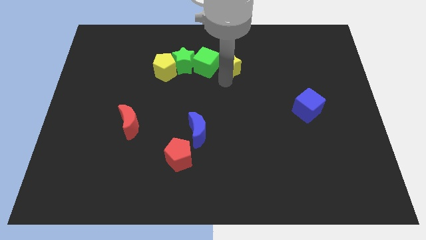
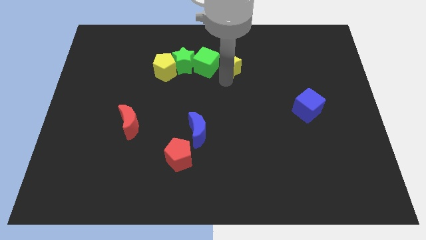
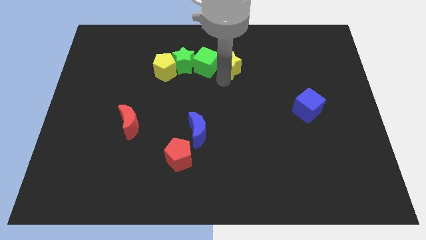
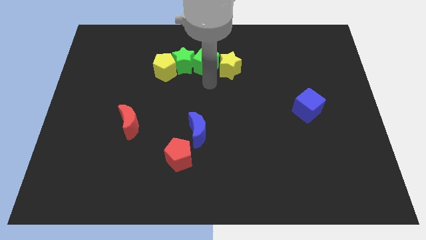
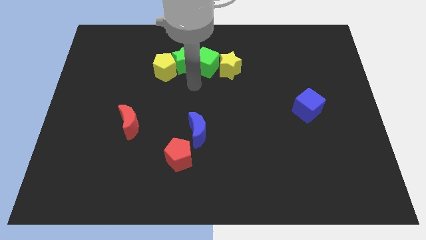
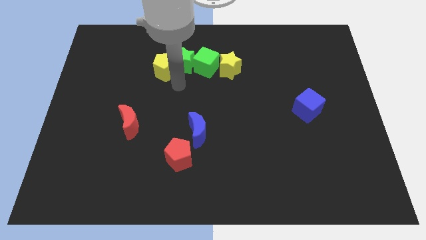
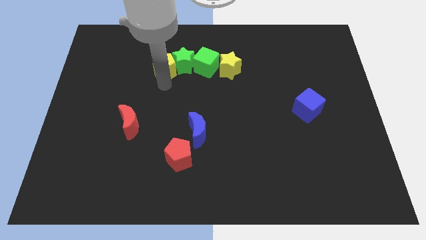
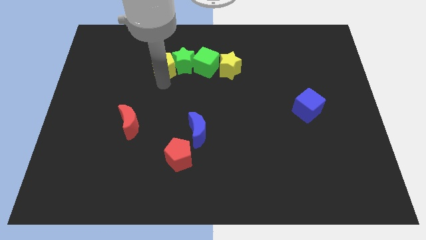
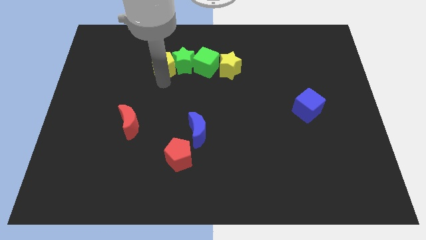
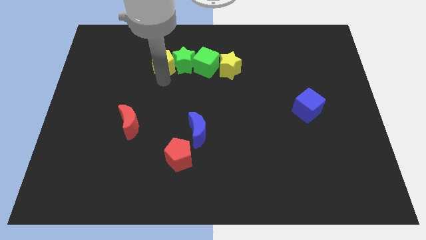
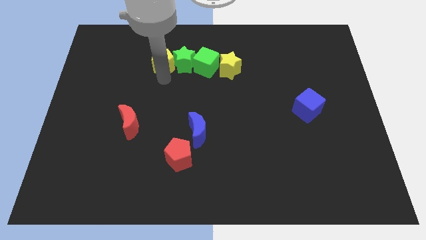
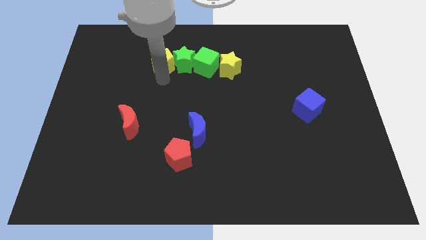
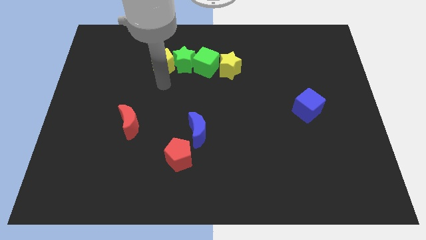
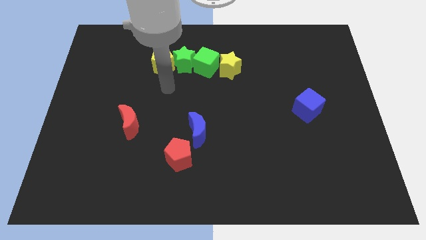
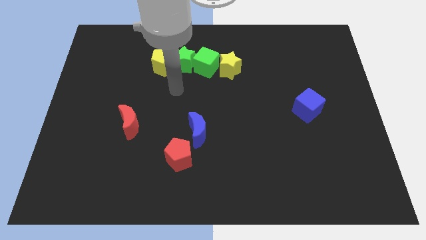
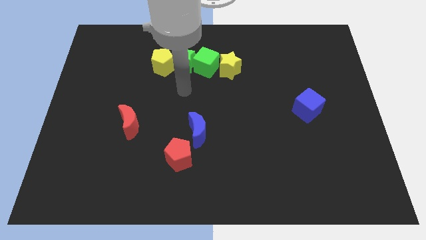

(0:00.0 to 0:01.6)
slightly move the yellow pentagon to the left of the green star

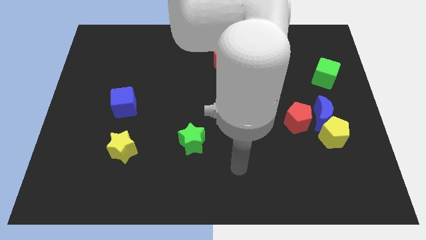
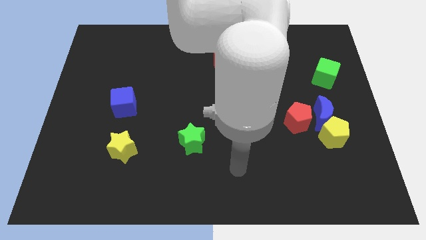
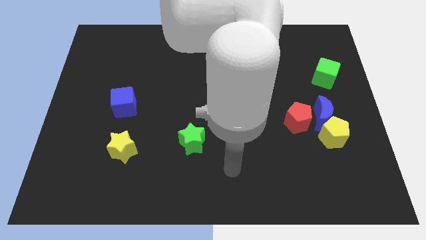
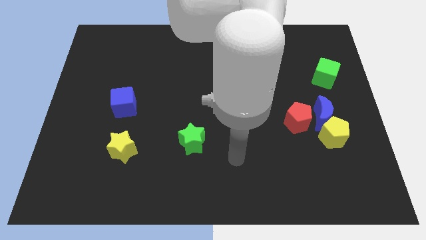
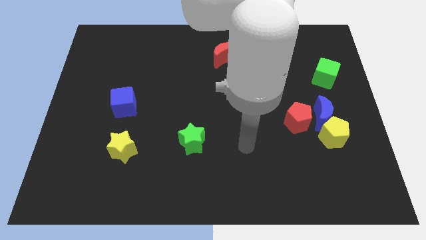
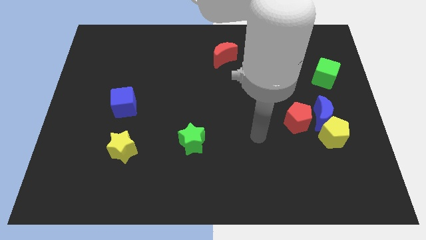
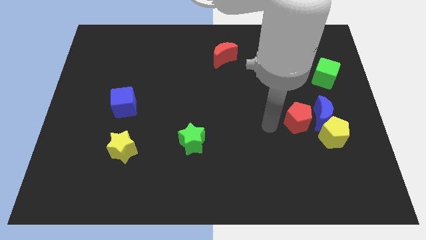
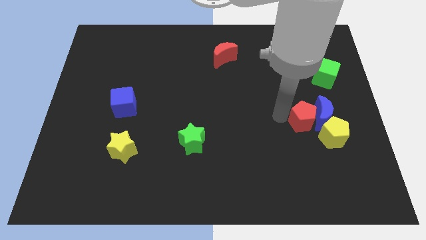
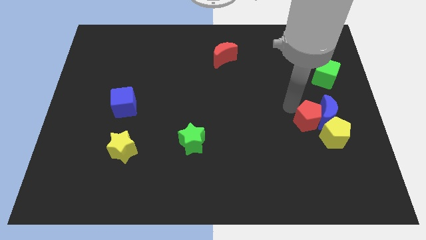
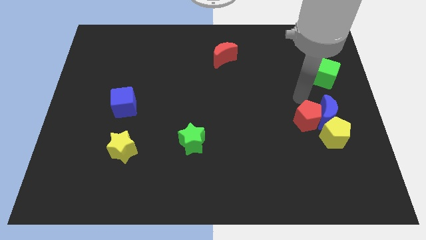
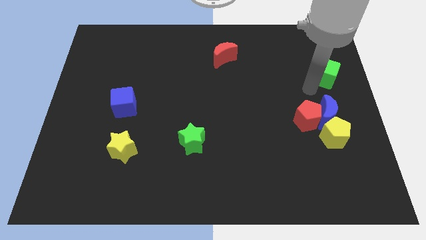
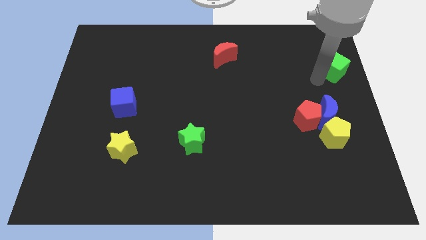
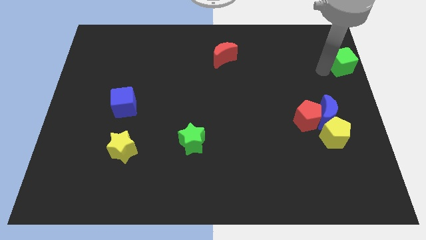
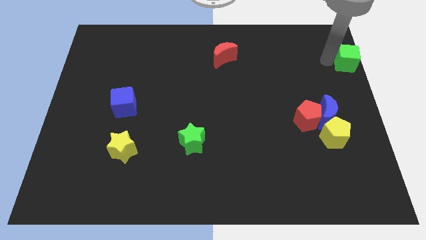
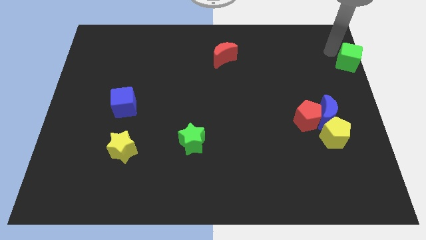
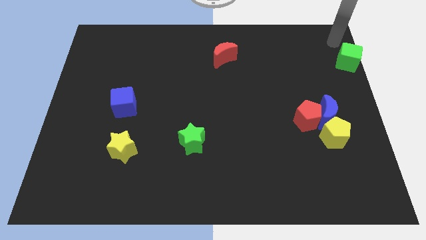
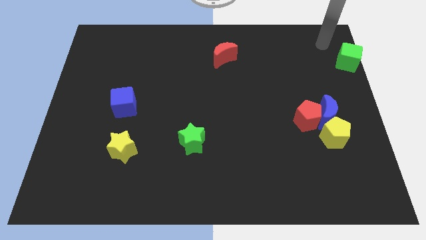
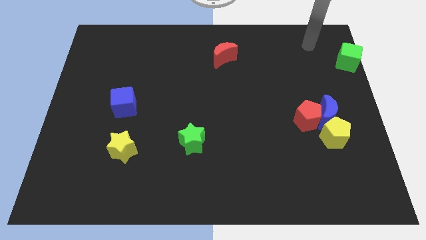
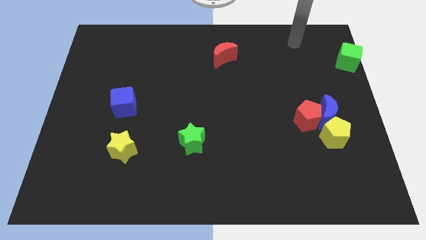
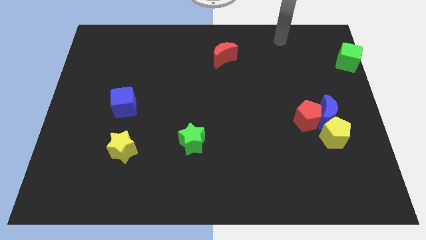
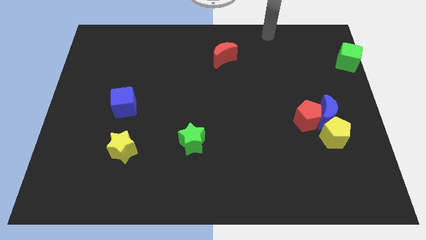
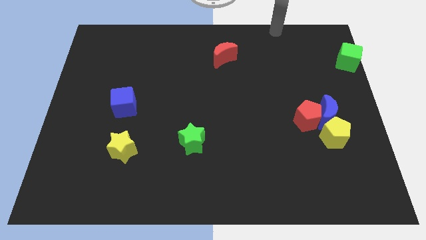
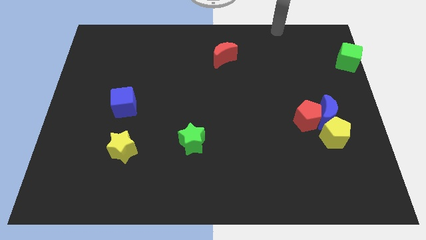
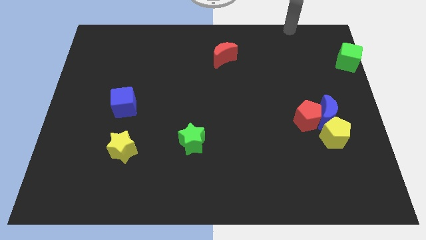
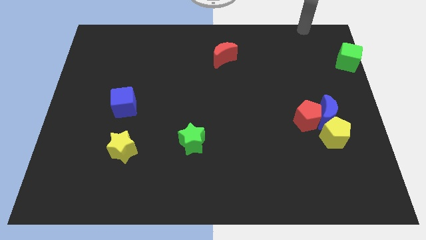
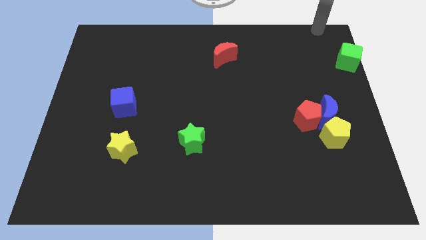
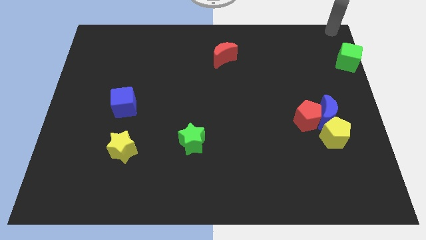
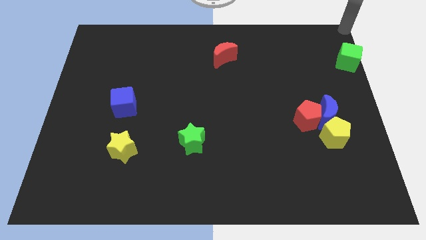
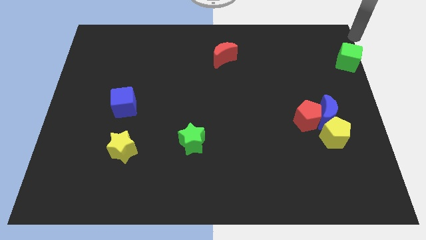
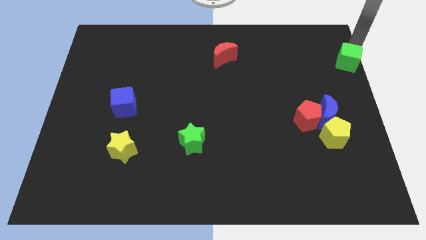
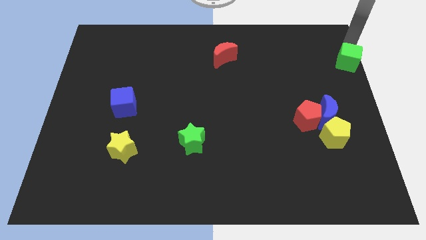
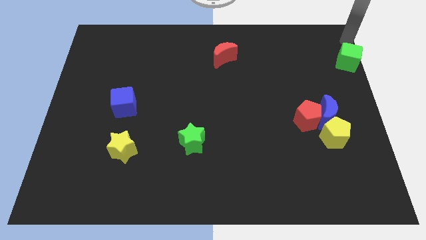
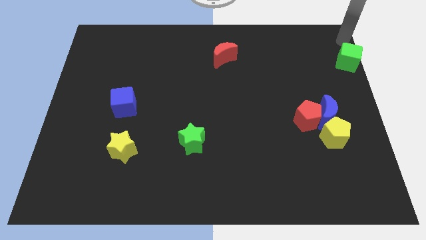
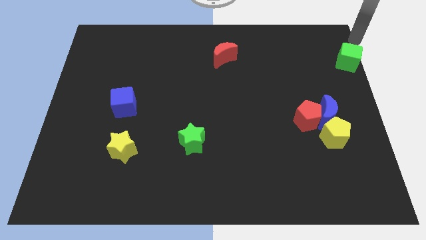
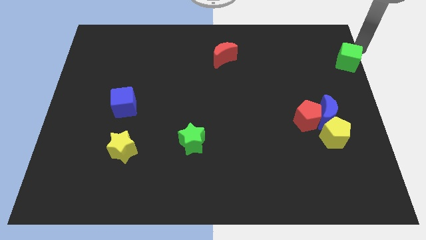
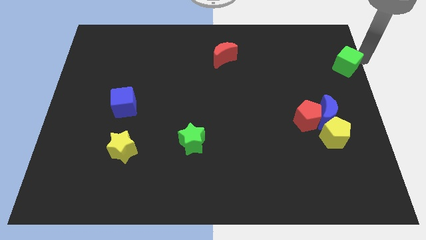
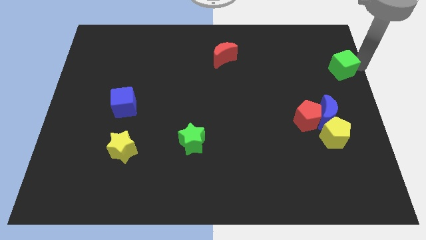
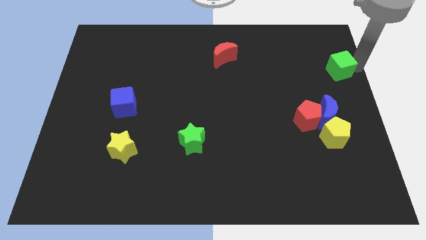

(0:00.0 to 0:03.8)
move the green cube towards the right side of the board

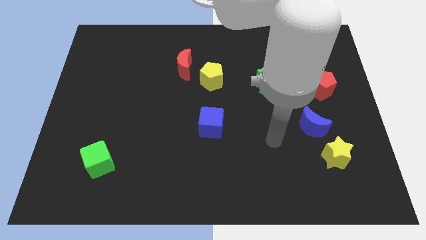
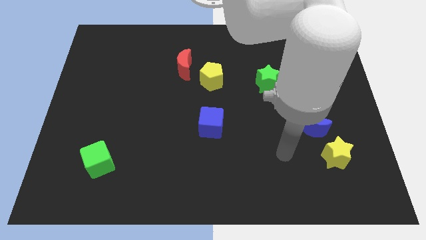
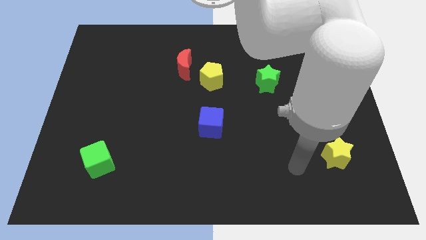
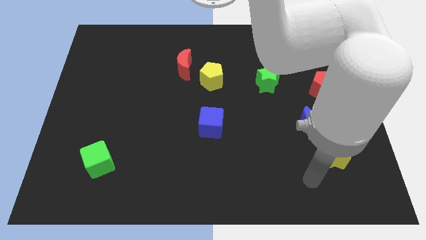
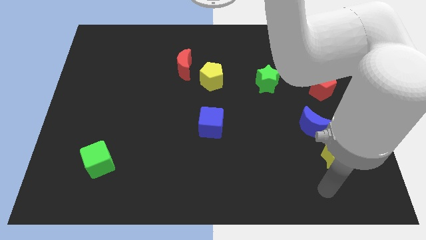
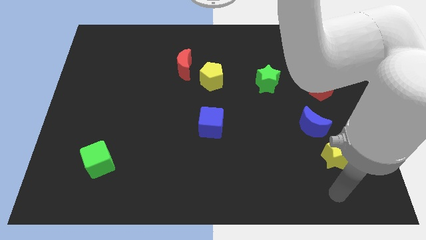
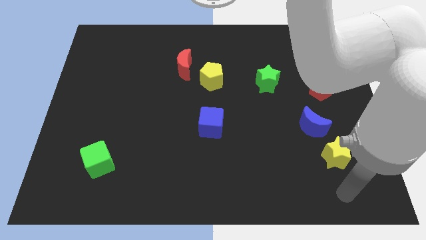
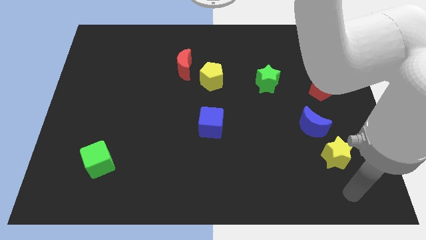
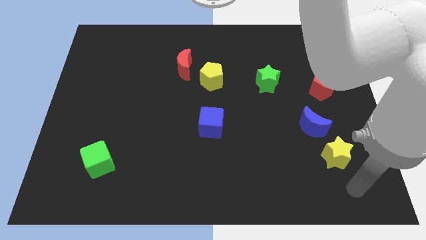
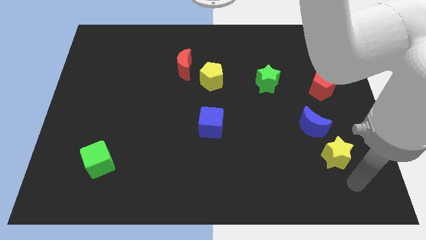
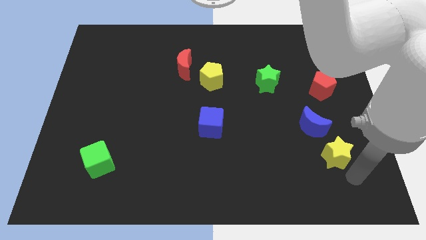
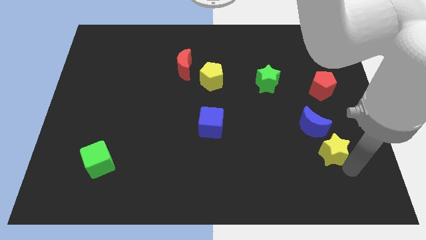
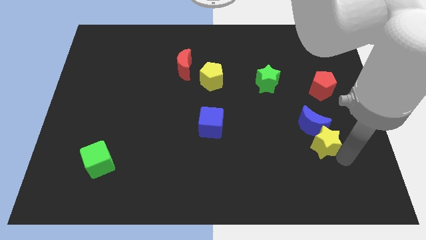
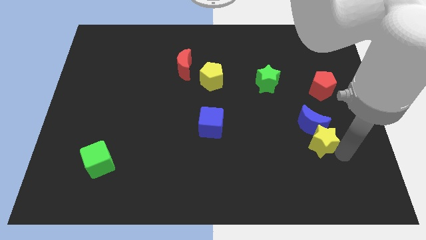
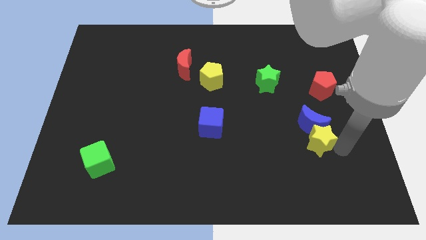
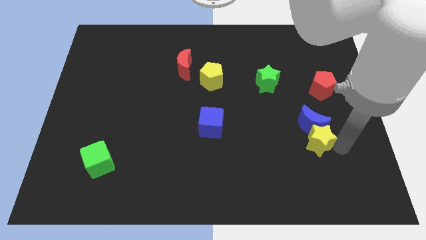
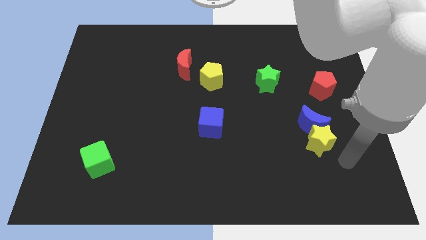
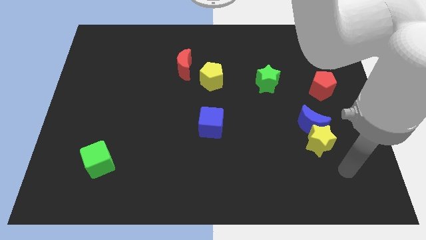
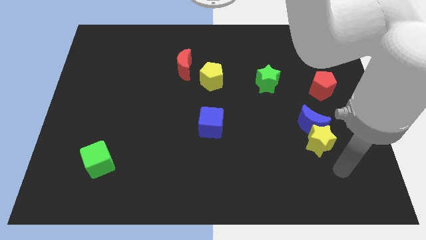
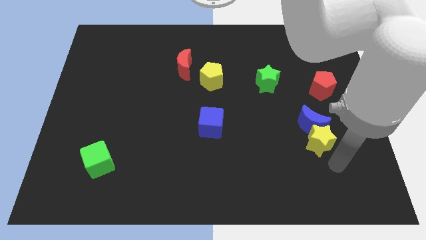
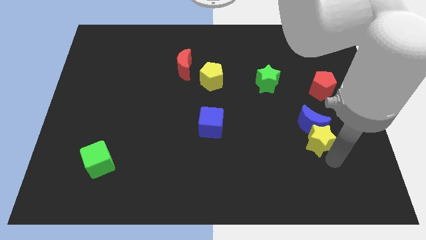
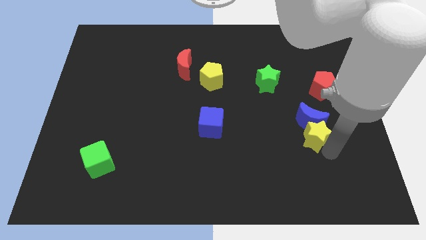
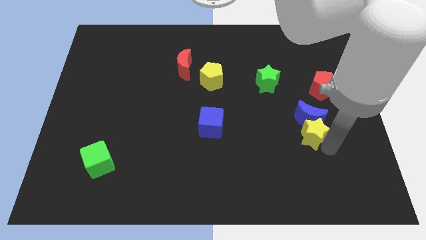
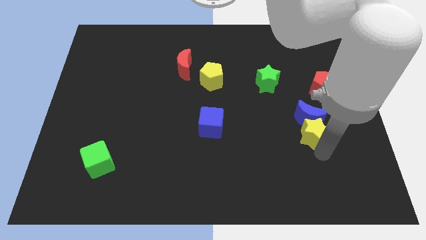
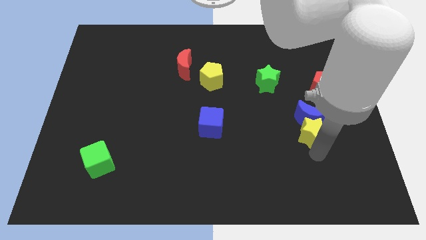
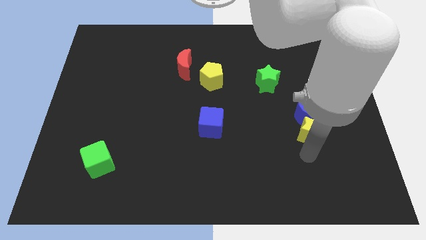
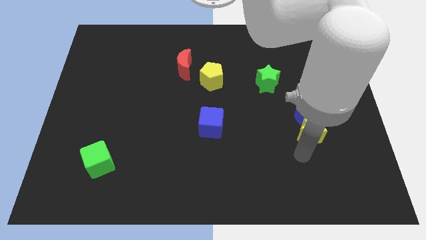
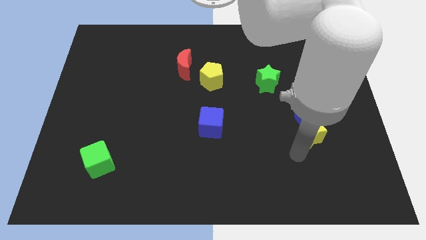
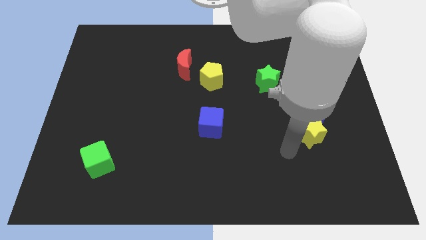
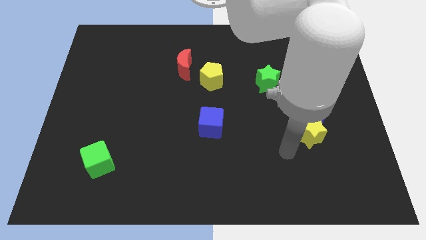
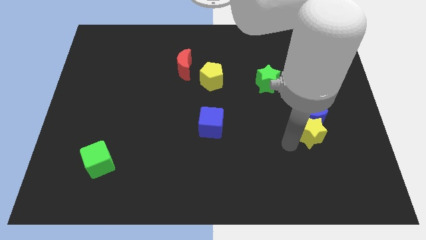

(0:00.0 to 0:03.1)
slide the yellow star vertically below the blue crescent

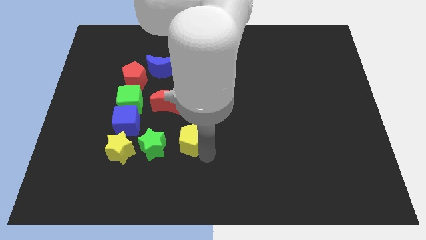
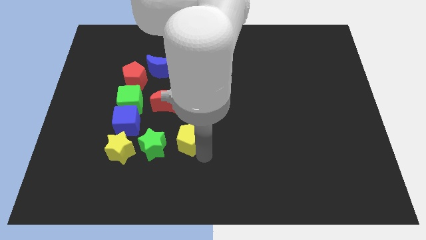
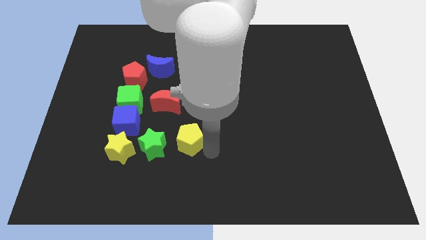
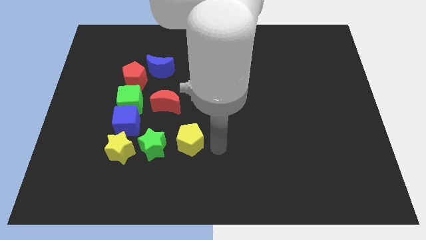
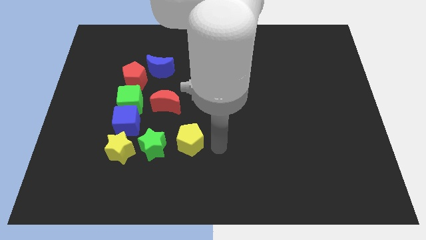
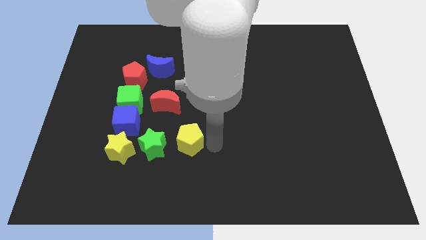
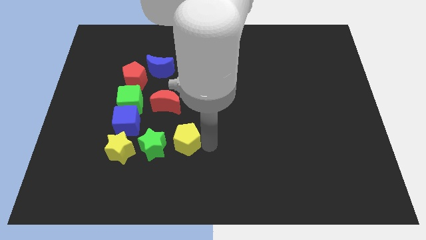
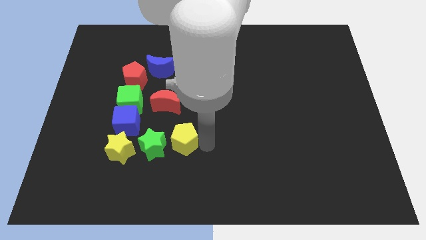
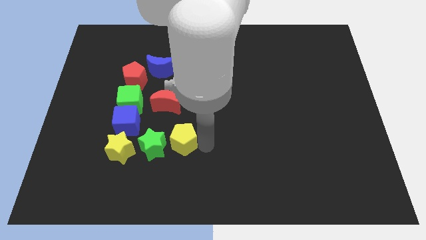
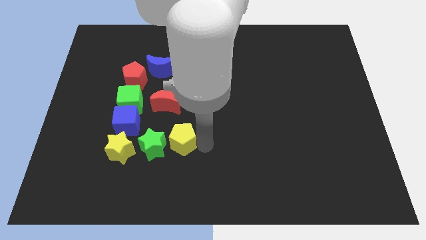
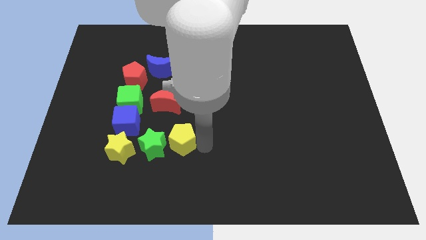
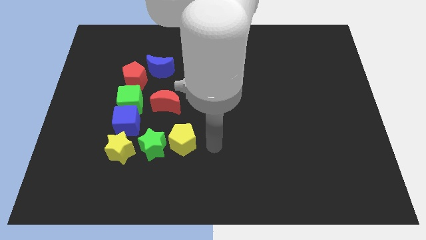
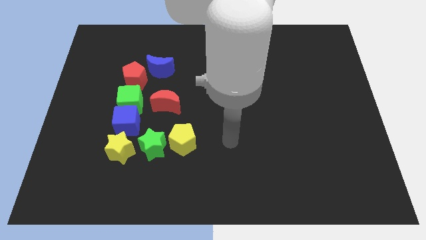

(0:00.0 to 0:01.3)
place yellow pentagon to the right of green star
